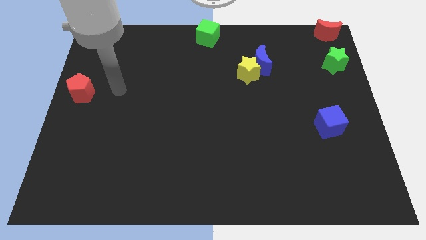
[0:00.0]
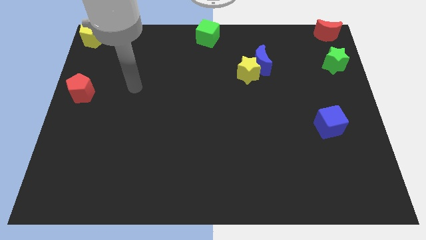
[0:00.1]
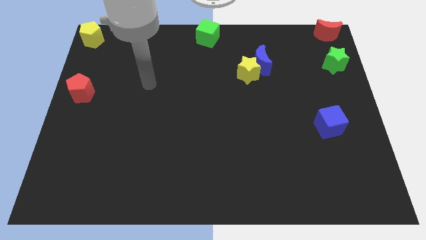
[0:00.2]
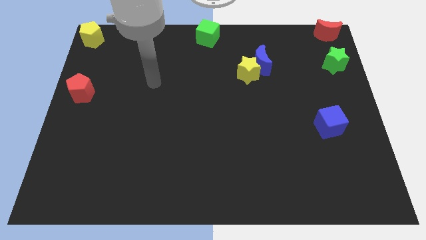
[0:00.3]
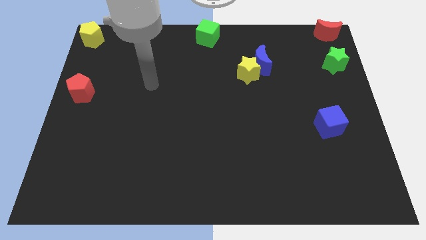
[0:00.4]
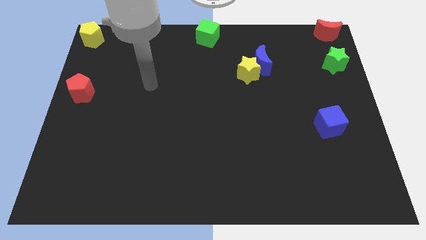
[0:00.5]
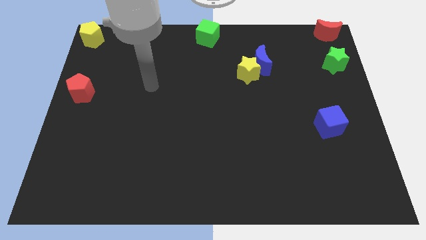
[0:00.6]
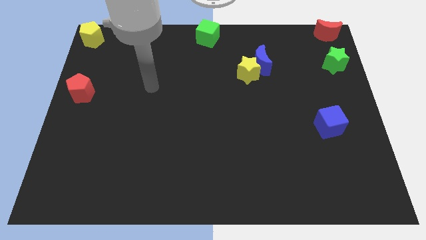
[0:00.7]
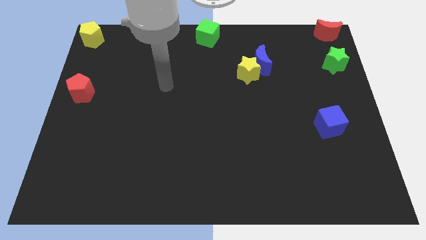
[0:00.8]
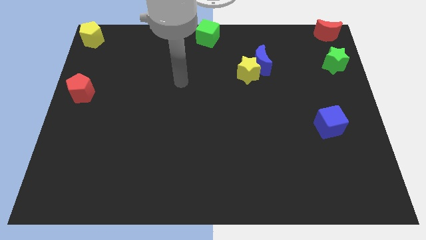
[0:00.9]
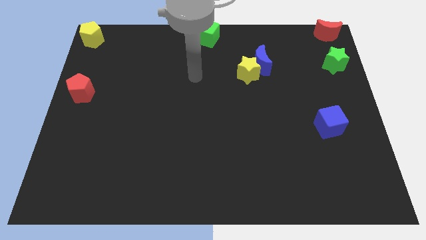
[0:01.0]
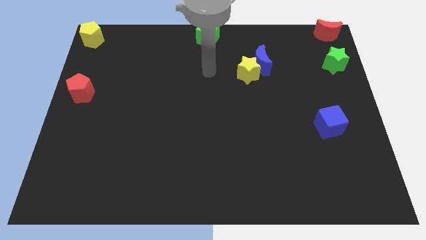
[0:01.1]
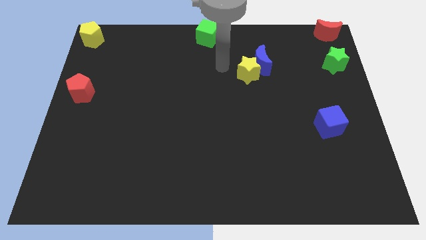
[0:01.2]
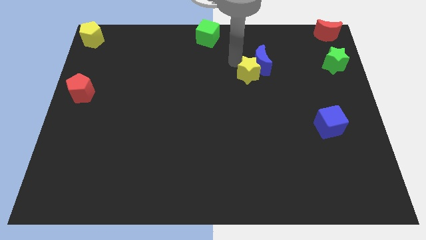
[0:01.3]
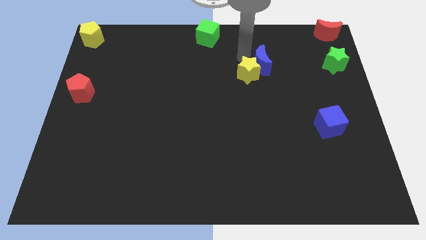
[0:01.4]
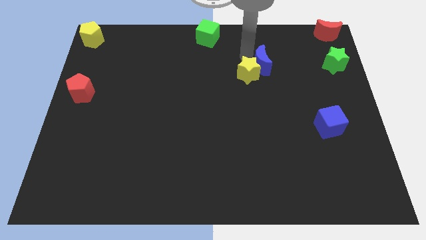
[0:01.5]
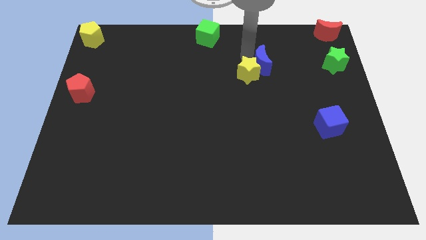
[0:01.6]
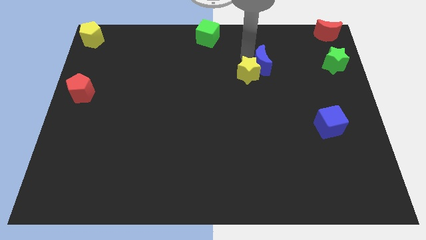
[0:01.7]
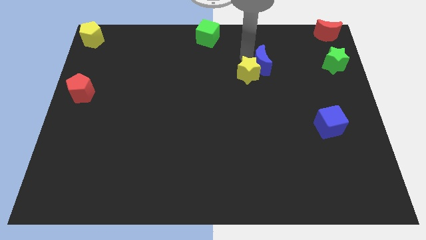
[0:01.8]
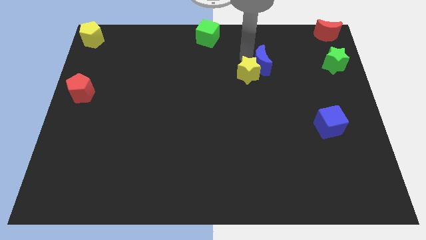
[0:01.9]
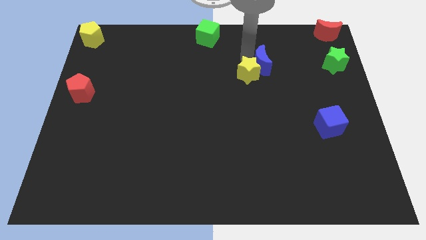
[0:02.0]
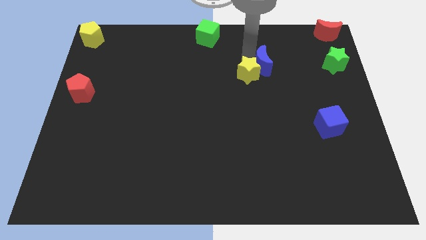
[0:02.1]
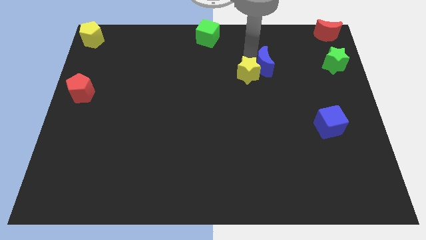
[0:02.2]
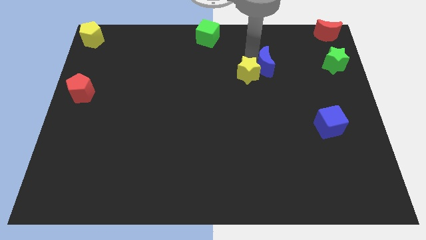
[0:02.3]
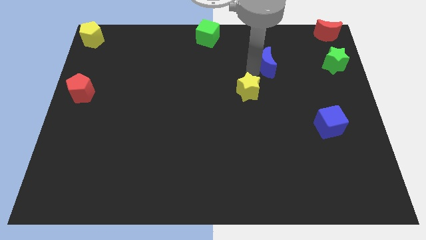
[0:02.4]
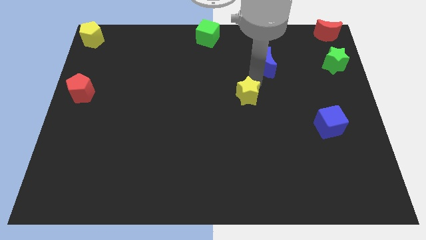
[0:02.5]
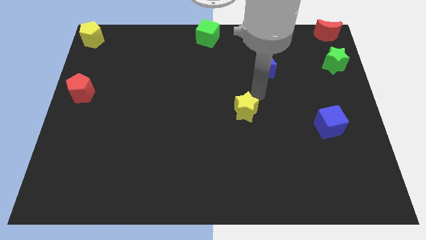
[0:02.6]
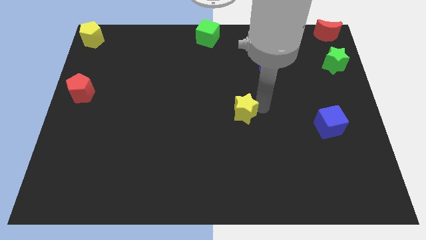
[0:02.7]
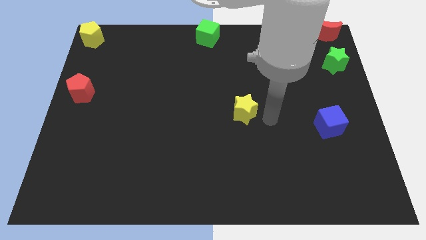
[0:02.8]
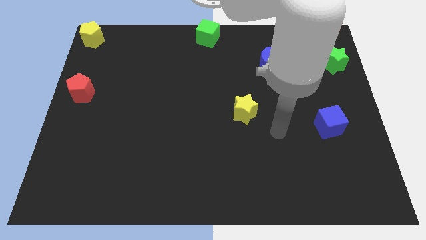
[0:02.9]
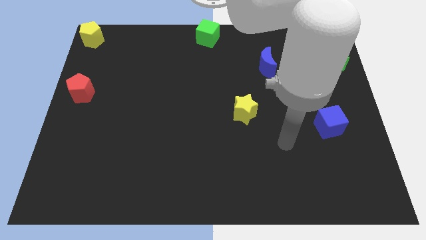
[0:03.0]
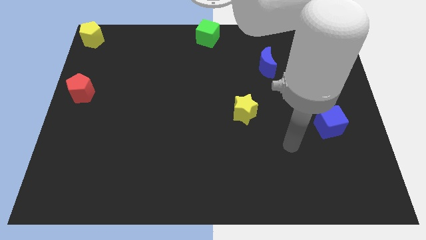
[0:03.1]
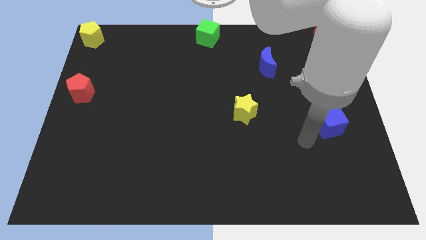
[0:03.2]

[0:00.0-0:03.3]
move the yellow star towards the center of the board

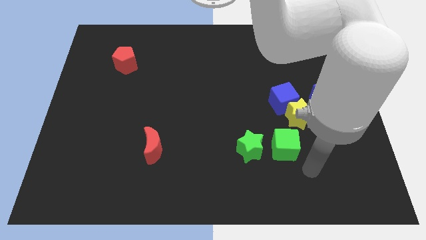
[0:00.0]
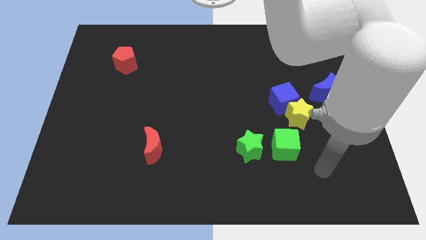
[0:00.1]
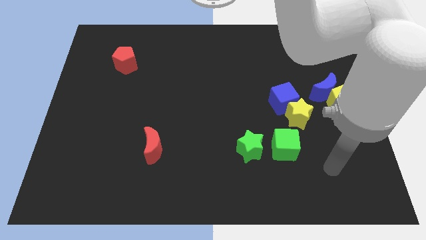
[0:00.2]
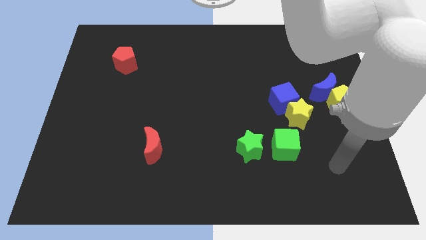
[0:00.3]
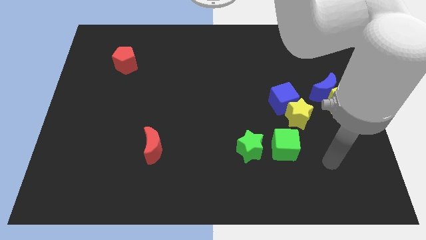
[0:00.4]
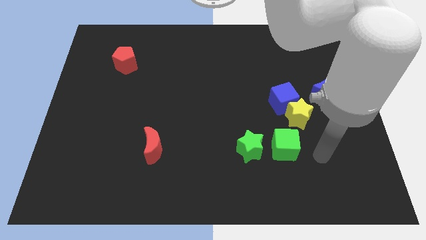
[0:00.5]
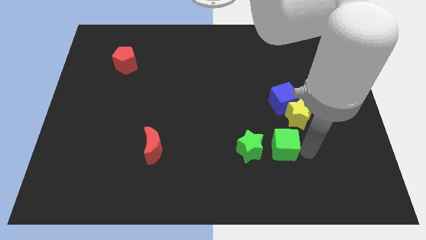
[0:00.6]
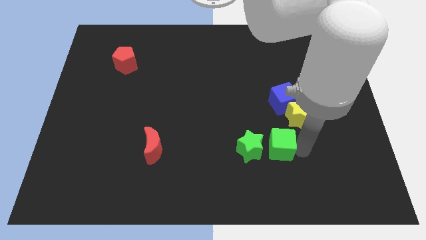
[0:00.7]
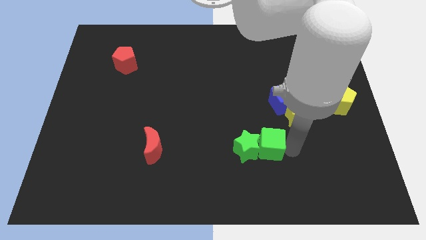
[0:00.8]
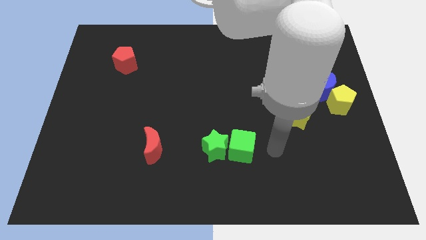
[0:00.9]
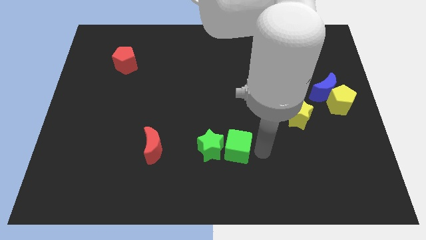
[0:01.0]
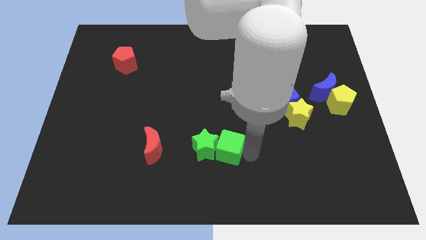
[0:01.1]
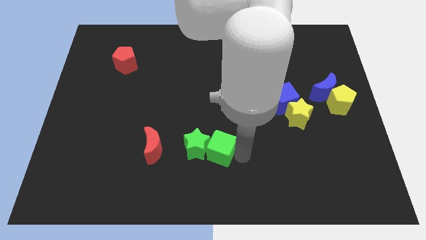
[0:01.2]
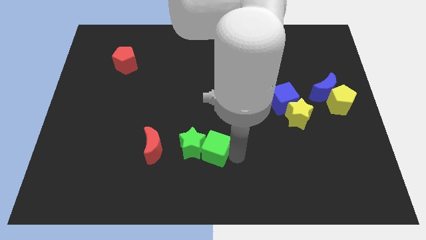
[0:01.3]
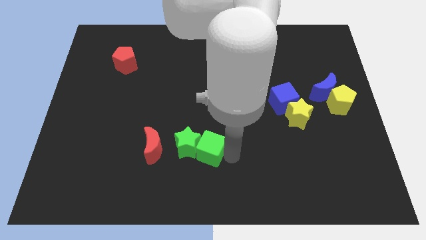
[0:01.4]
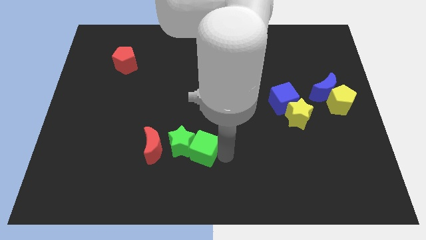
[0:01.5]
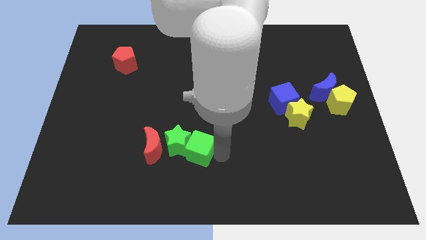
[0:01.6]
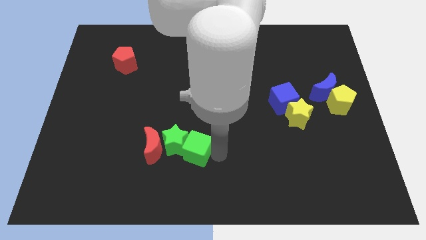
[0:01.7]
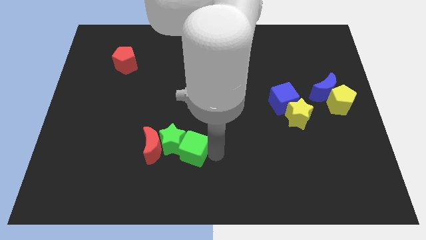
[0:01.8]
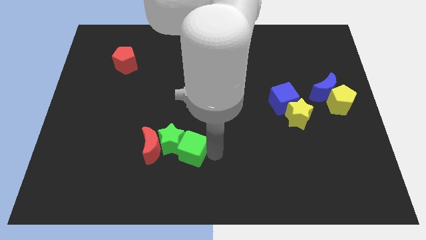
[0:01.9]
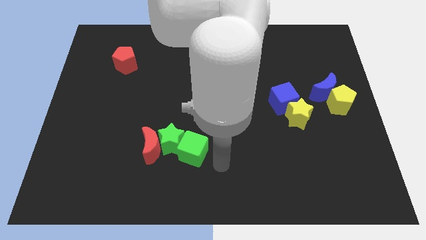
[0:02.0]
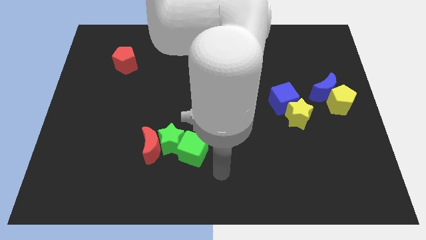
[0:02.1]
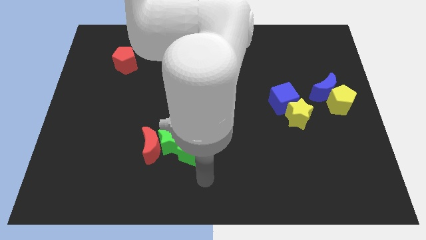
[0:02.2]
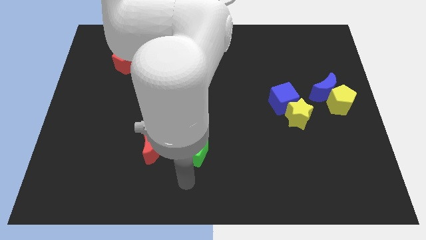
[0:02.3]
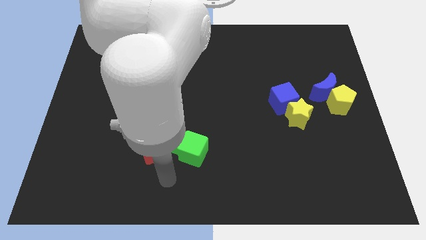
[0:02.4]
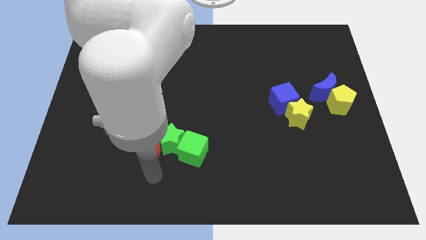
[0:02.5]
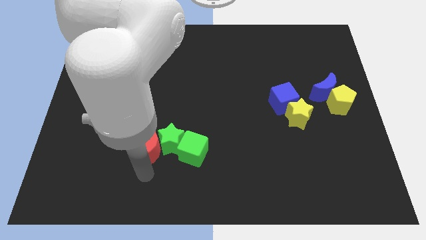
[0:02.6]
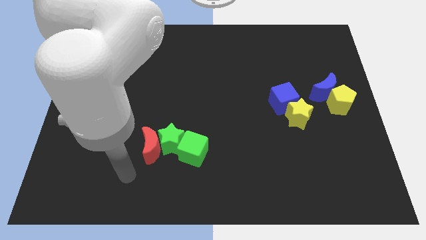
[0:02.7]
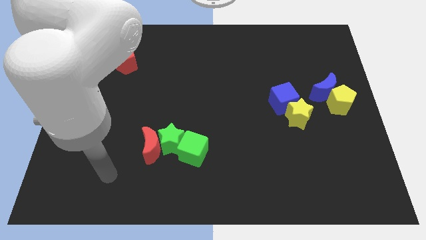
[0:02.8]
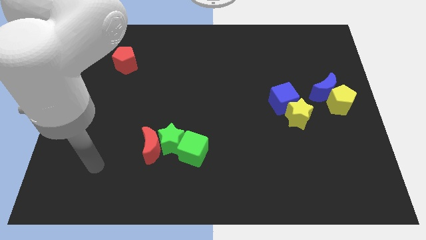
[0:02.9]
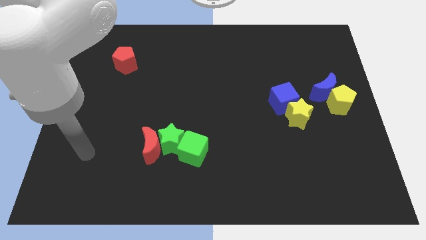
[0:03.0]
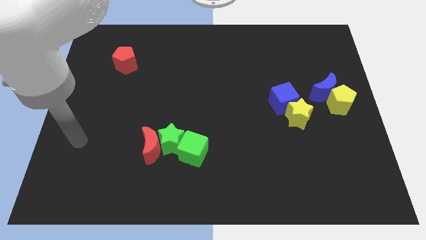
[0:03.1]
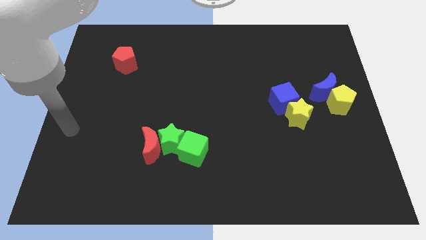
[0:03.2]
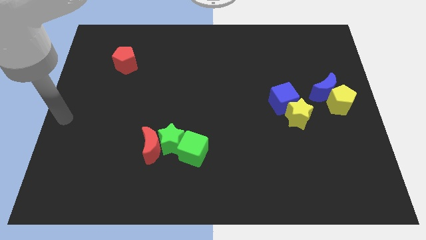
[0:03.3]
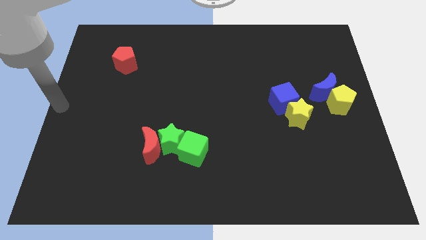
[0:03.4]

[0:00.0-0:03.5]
move the green blocks to the right of the red crescent

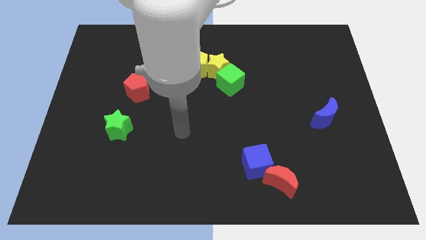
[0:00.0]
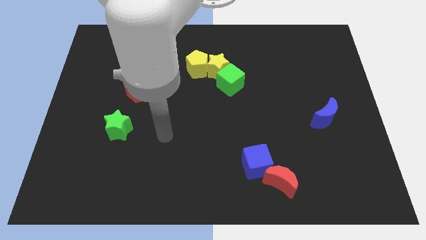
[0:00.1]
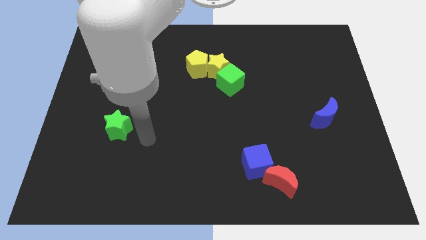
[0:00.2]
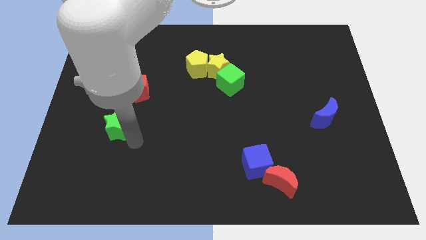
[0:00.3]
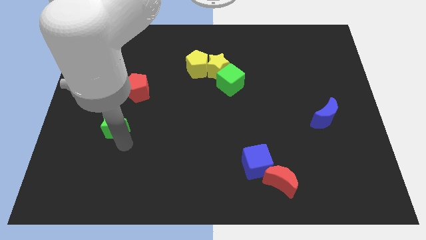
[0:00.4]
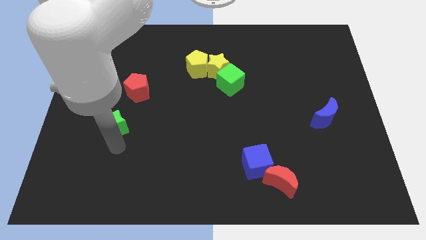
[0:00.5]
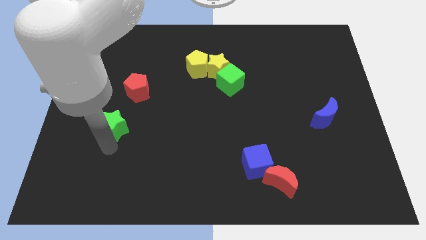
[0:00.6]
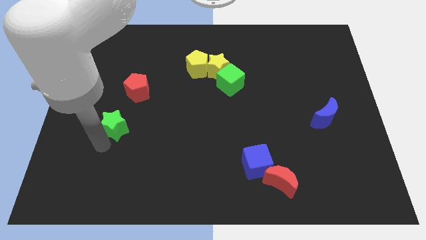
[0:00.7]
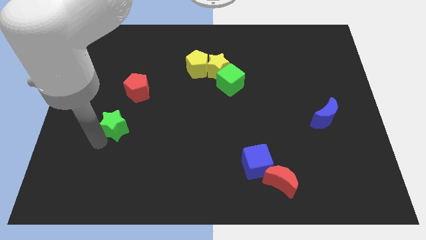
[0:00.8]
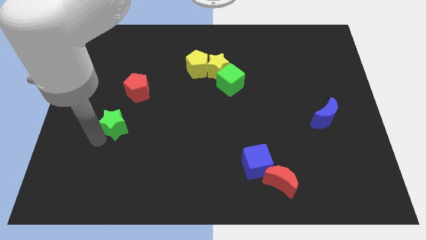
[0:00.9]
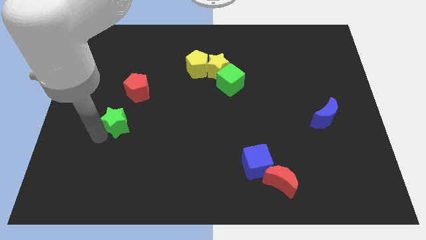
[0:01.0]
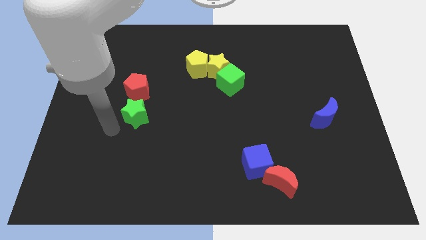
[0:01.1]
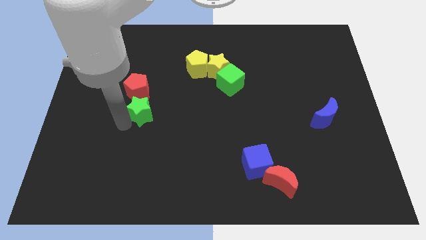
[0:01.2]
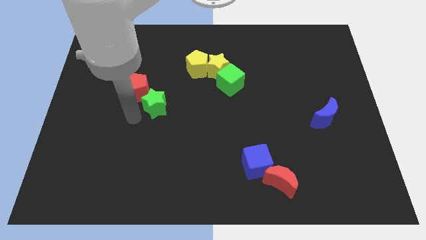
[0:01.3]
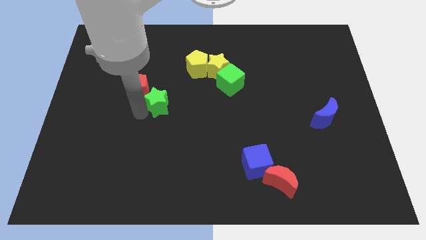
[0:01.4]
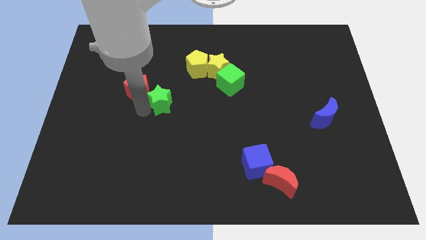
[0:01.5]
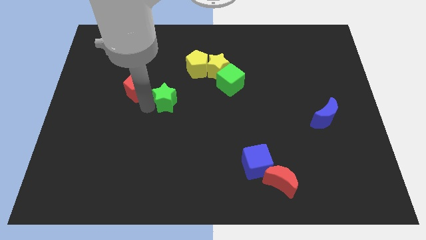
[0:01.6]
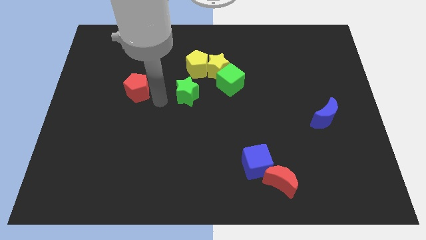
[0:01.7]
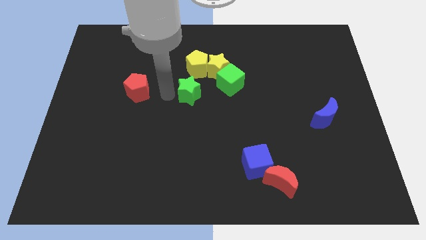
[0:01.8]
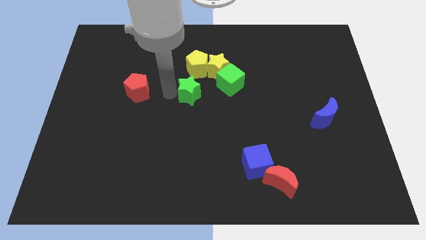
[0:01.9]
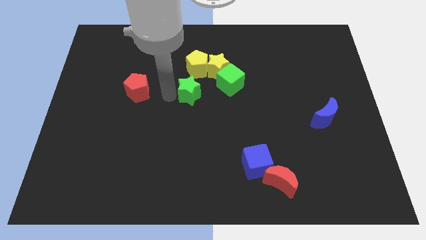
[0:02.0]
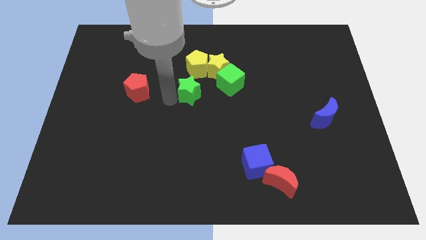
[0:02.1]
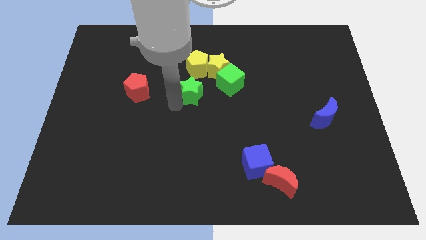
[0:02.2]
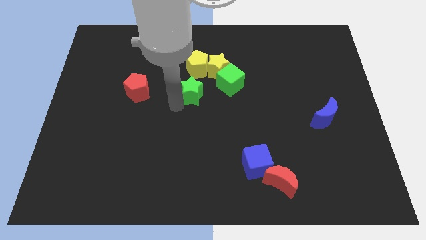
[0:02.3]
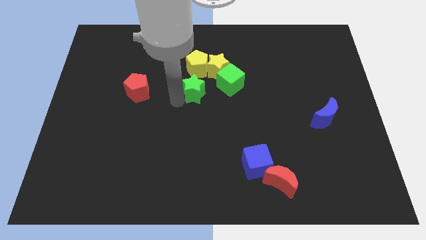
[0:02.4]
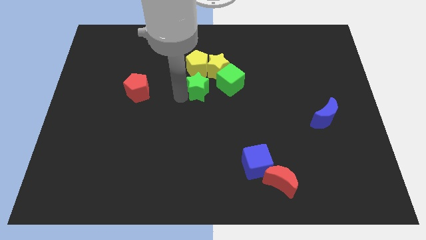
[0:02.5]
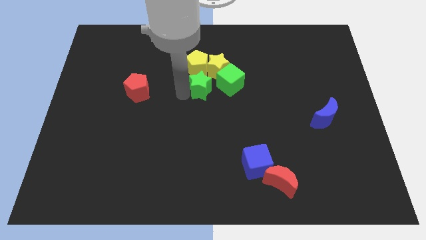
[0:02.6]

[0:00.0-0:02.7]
push the green star towards the group of blocks
